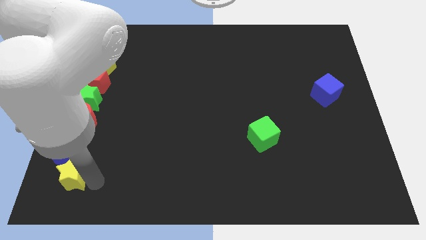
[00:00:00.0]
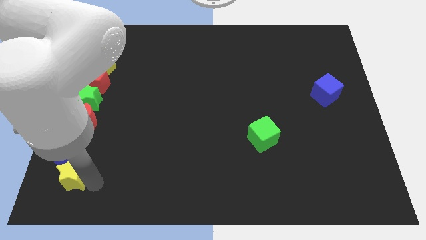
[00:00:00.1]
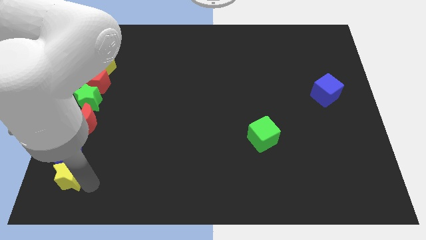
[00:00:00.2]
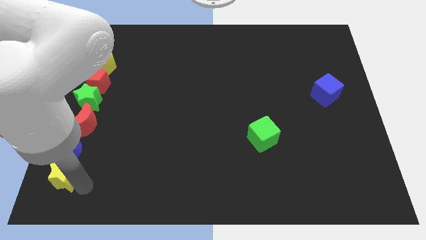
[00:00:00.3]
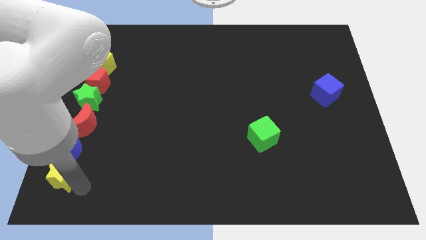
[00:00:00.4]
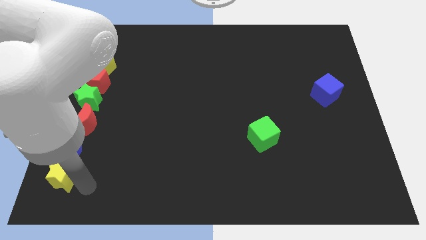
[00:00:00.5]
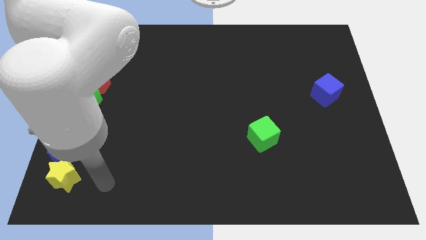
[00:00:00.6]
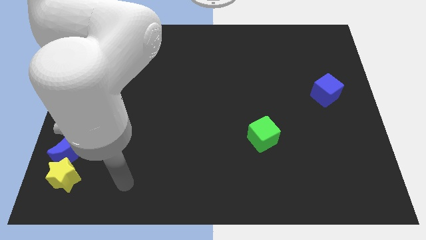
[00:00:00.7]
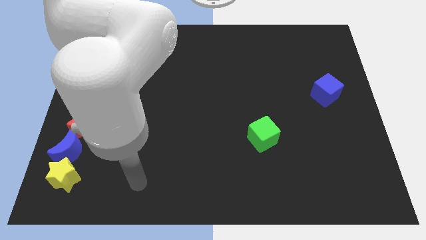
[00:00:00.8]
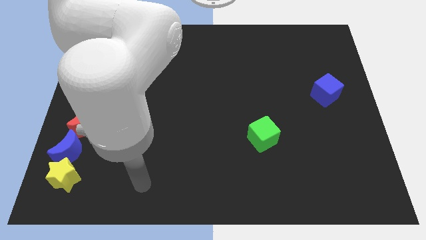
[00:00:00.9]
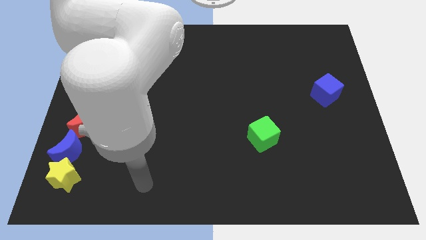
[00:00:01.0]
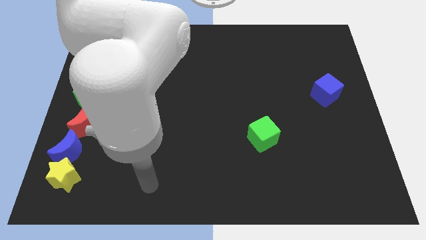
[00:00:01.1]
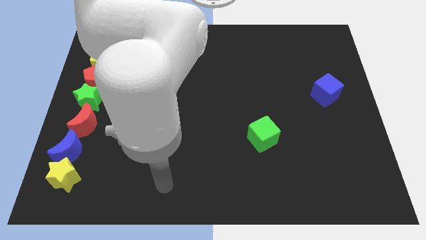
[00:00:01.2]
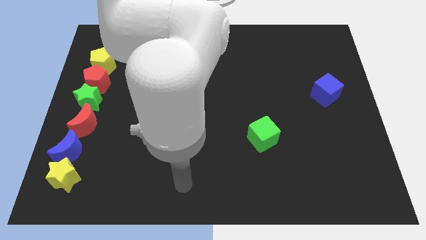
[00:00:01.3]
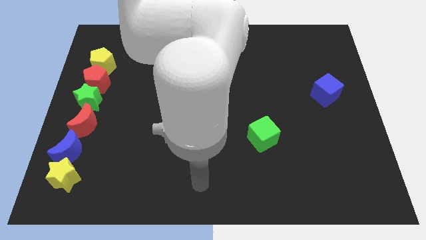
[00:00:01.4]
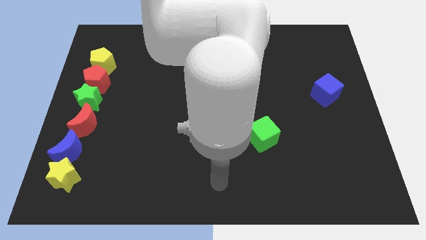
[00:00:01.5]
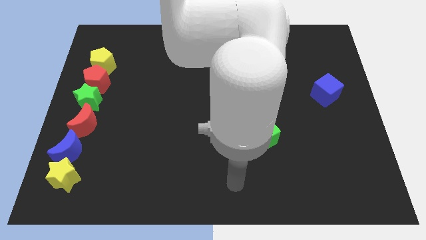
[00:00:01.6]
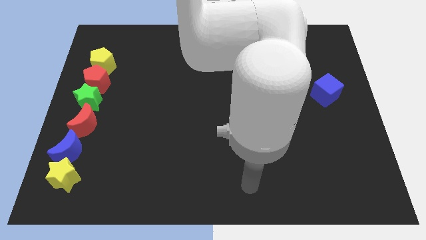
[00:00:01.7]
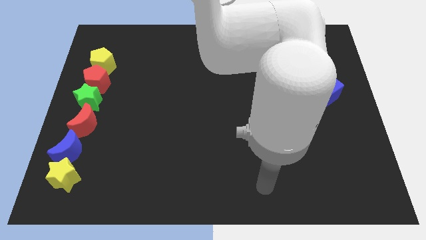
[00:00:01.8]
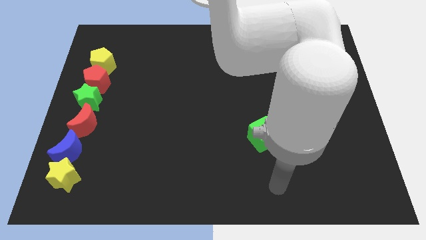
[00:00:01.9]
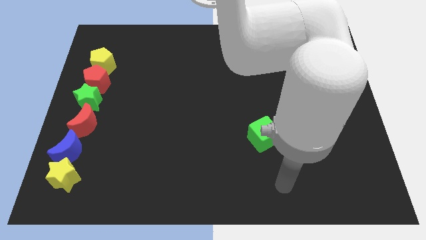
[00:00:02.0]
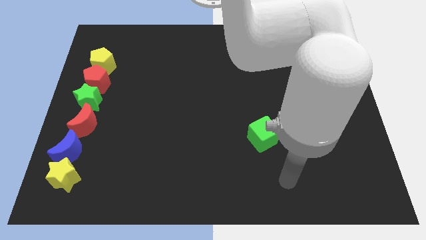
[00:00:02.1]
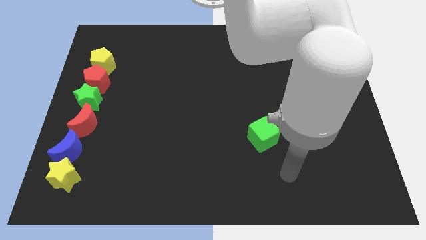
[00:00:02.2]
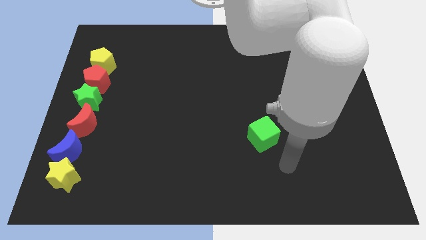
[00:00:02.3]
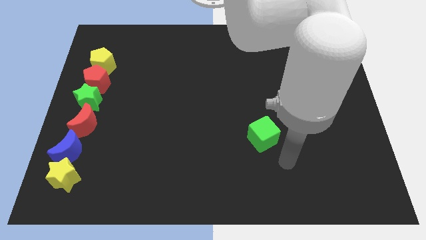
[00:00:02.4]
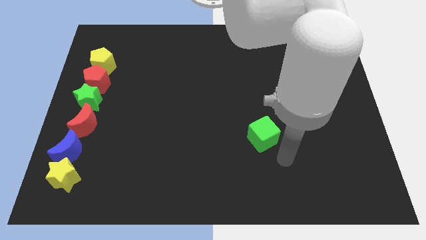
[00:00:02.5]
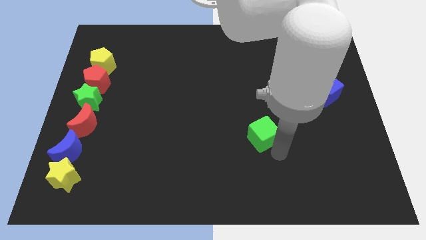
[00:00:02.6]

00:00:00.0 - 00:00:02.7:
place your arm to the bottom of the green cube

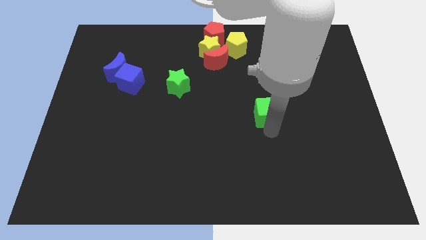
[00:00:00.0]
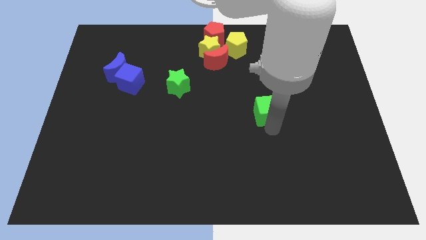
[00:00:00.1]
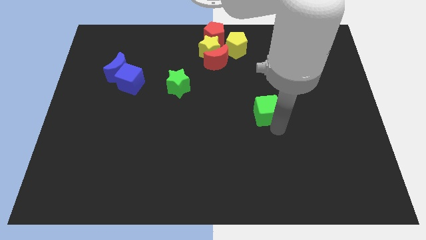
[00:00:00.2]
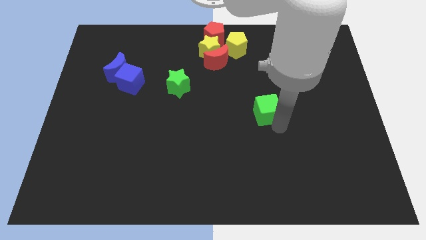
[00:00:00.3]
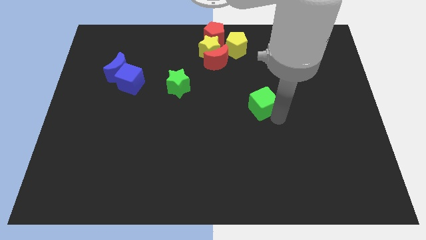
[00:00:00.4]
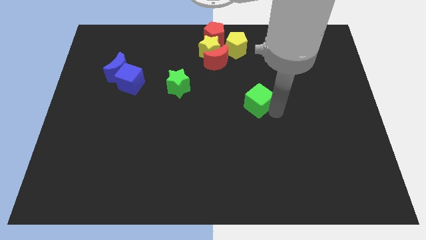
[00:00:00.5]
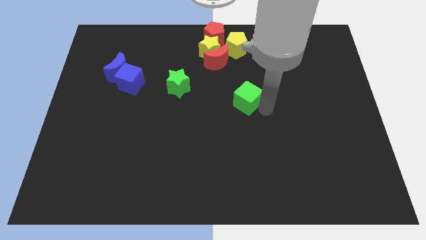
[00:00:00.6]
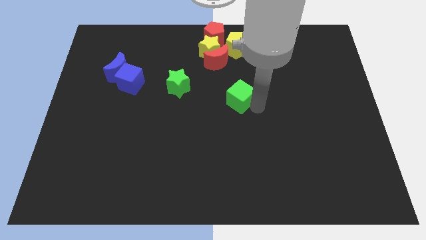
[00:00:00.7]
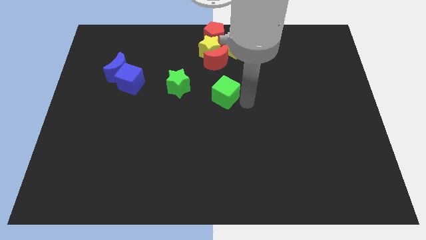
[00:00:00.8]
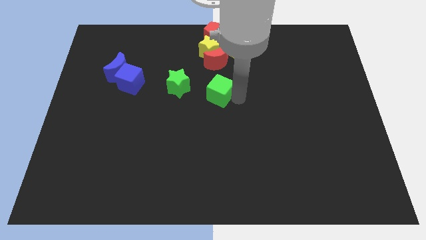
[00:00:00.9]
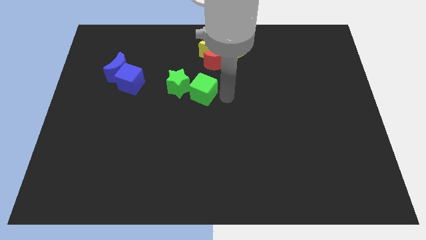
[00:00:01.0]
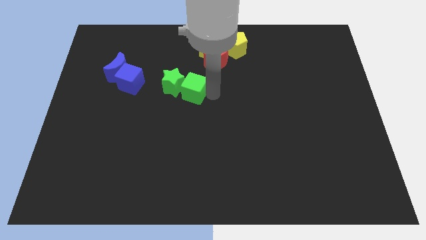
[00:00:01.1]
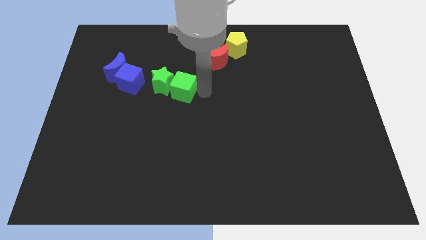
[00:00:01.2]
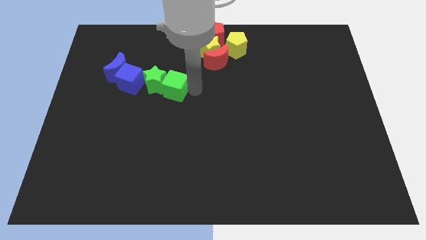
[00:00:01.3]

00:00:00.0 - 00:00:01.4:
push the green star with the green cube towards the left center of the board

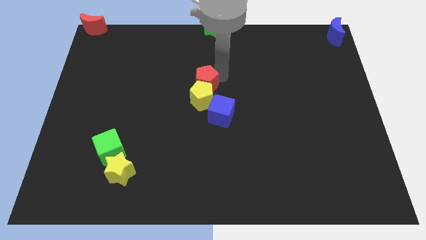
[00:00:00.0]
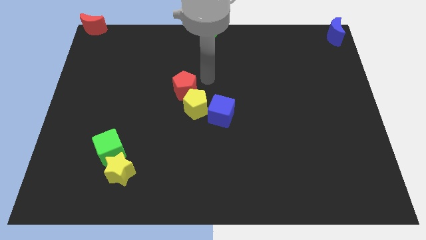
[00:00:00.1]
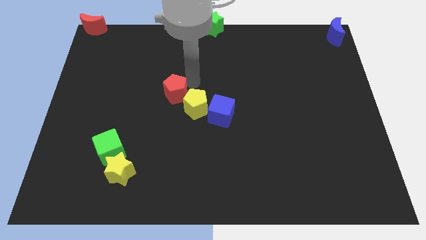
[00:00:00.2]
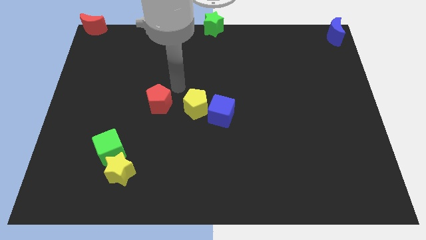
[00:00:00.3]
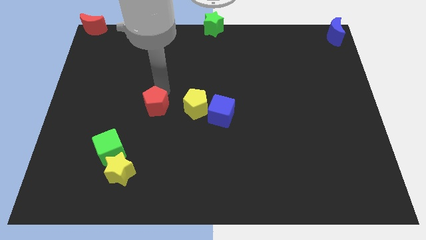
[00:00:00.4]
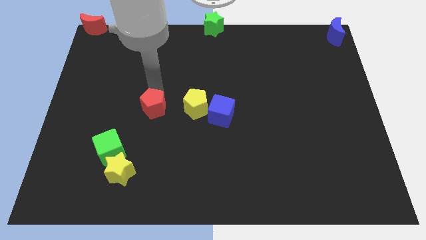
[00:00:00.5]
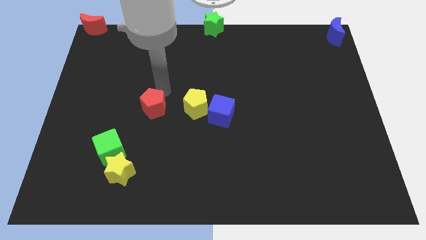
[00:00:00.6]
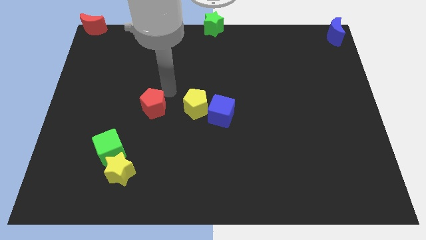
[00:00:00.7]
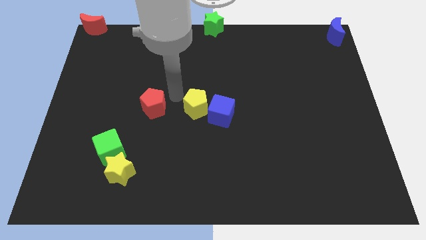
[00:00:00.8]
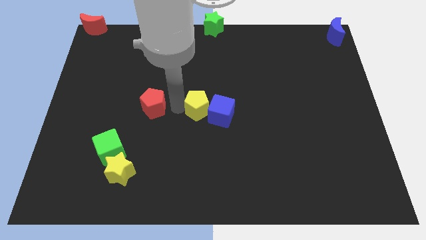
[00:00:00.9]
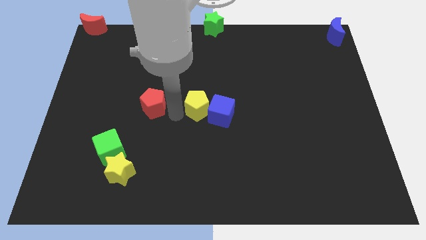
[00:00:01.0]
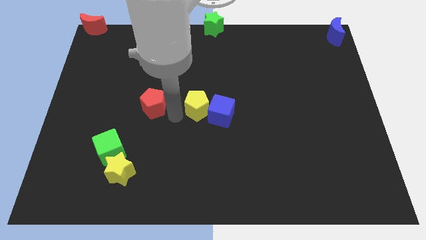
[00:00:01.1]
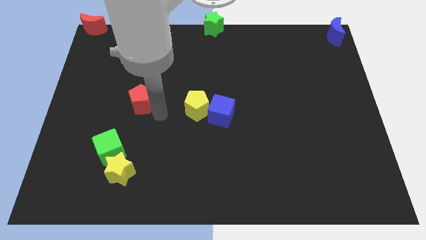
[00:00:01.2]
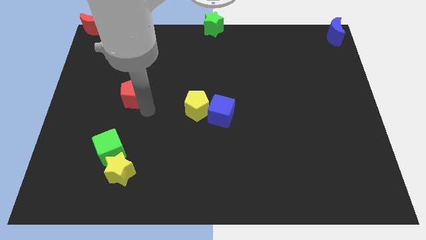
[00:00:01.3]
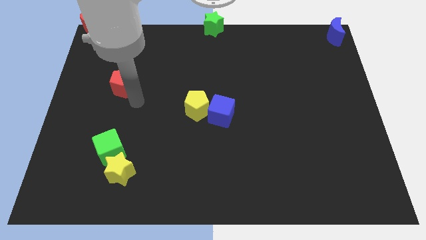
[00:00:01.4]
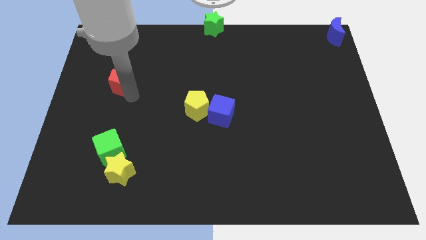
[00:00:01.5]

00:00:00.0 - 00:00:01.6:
separate yellow pentagon and red pentagon

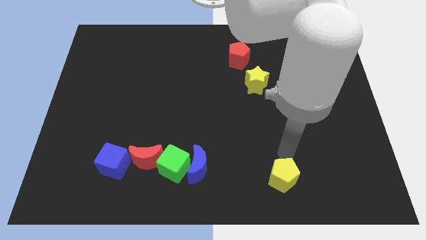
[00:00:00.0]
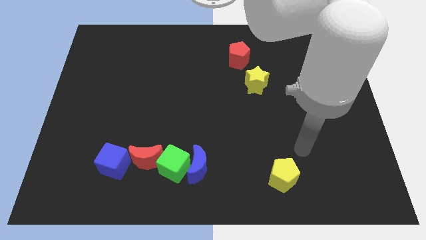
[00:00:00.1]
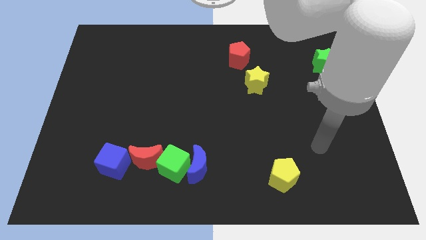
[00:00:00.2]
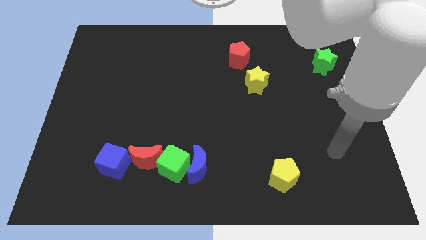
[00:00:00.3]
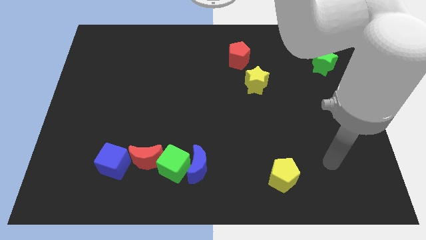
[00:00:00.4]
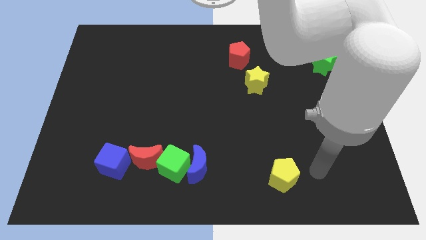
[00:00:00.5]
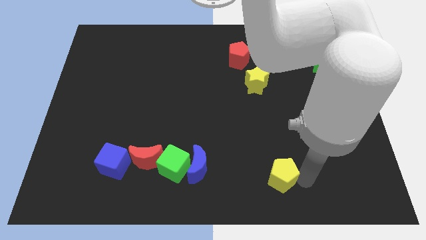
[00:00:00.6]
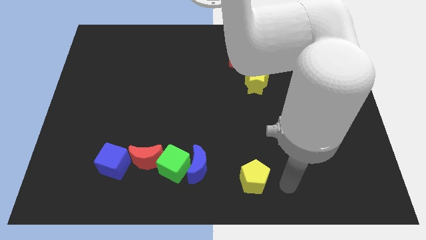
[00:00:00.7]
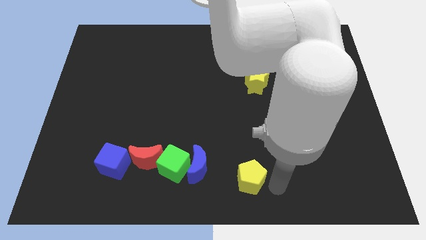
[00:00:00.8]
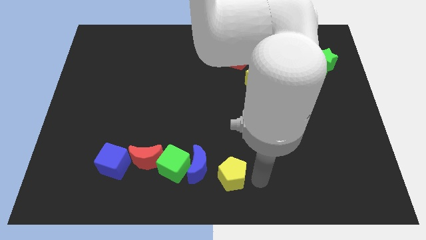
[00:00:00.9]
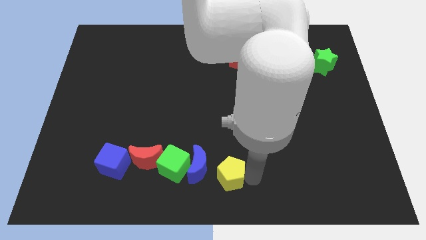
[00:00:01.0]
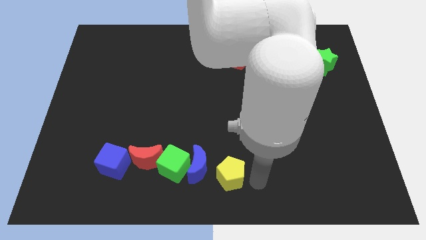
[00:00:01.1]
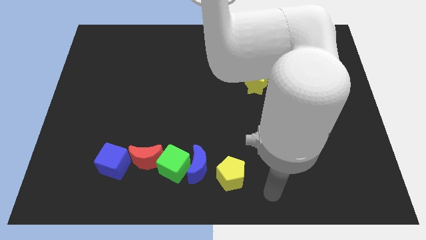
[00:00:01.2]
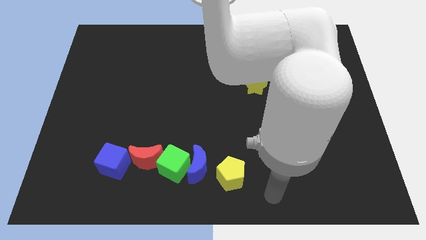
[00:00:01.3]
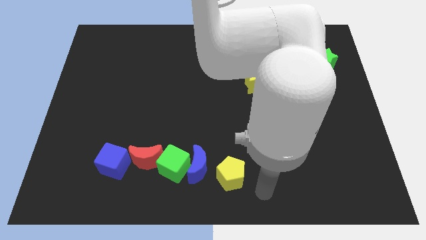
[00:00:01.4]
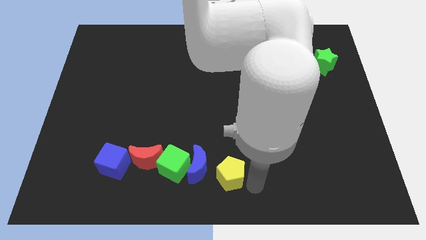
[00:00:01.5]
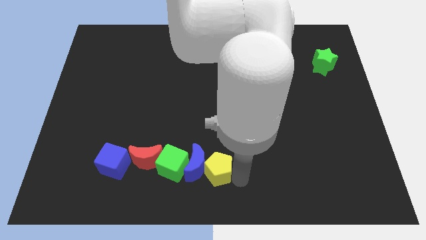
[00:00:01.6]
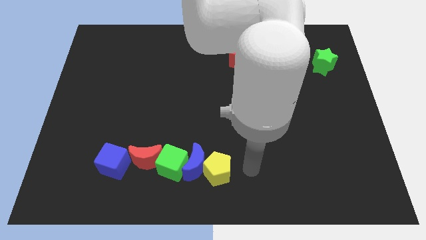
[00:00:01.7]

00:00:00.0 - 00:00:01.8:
place the yellow pentagon to the right of the blue moon

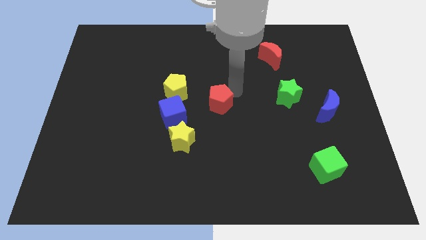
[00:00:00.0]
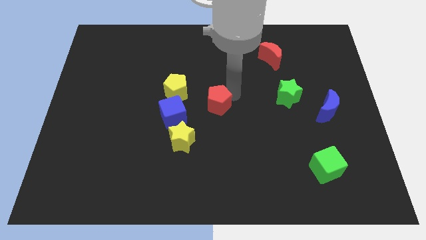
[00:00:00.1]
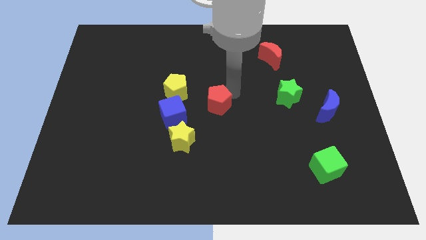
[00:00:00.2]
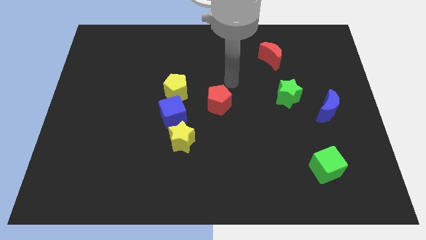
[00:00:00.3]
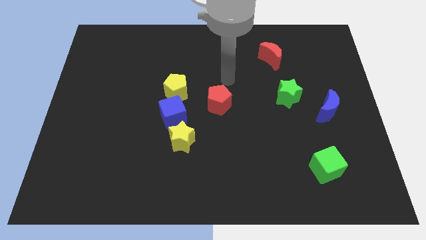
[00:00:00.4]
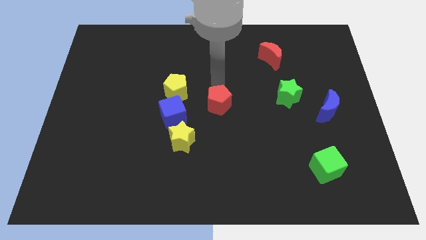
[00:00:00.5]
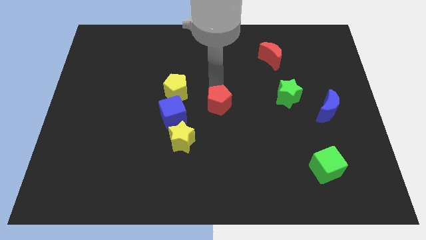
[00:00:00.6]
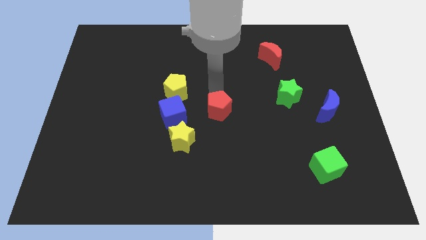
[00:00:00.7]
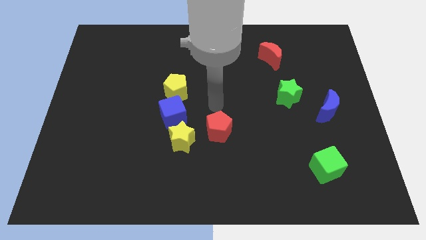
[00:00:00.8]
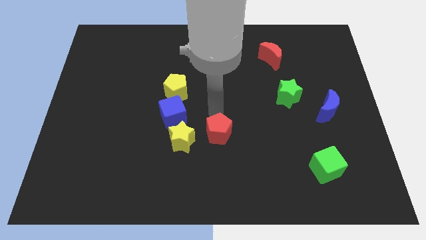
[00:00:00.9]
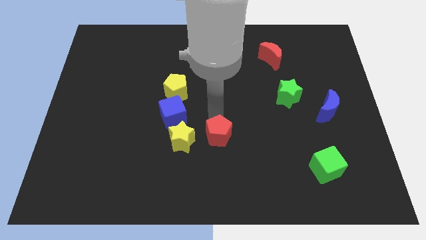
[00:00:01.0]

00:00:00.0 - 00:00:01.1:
push red pentagon downwards

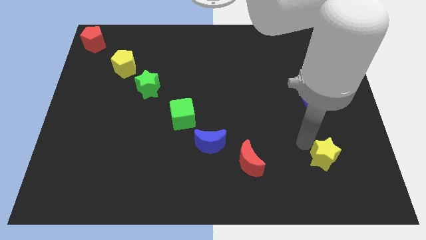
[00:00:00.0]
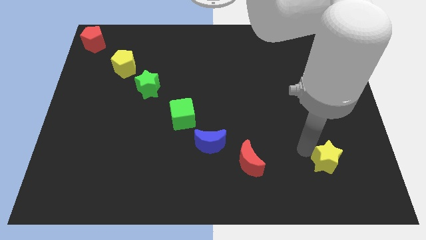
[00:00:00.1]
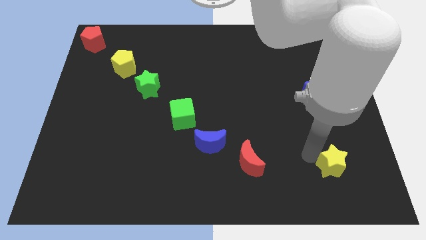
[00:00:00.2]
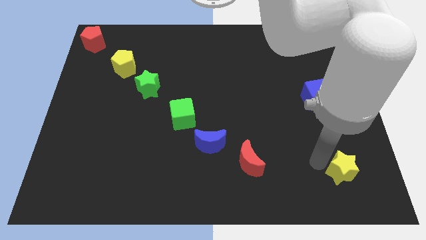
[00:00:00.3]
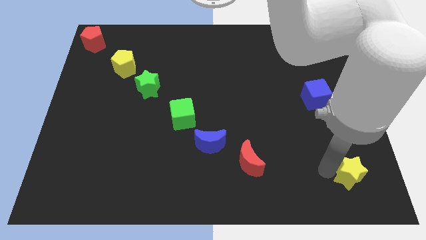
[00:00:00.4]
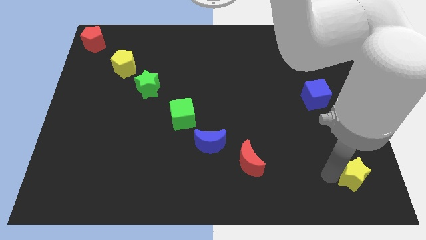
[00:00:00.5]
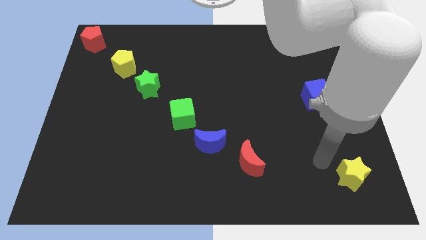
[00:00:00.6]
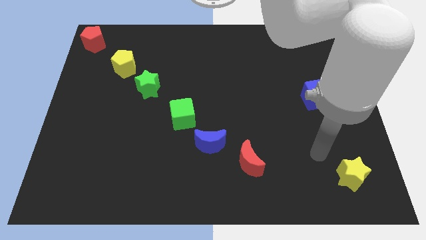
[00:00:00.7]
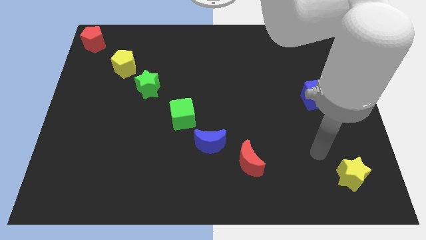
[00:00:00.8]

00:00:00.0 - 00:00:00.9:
diagonally move the yellow star down
